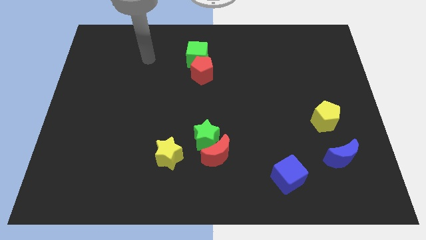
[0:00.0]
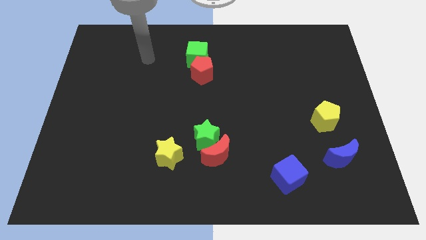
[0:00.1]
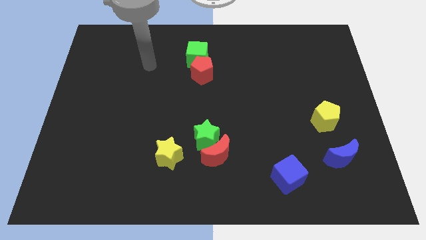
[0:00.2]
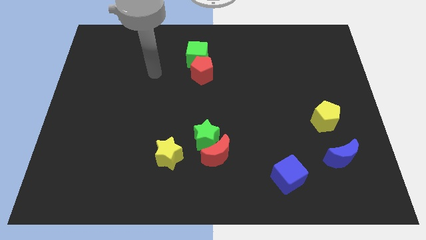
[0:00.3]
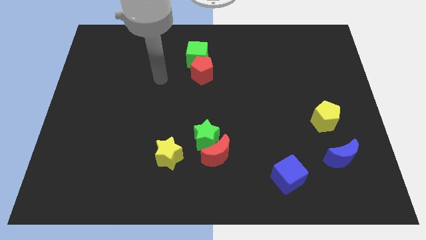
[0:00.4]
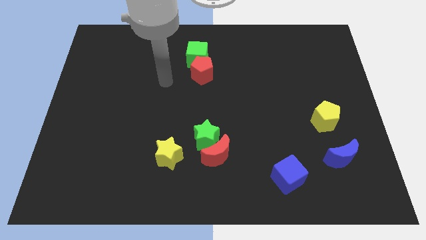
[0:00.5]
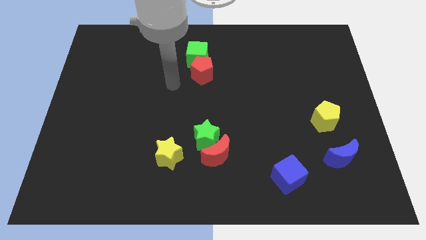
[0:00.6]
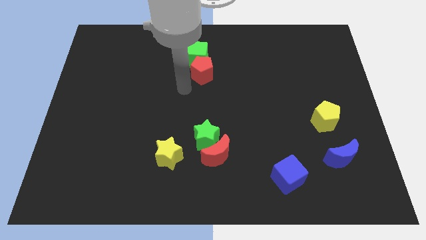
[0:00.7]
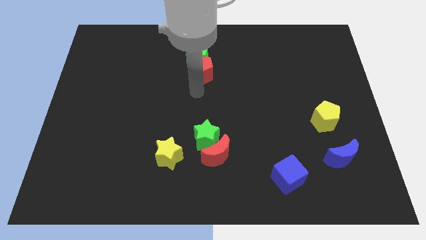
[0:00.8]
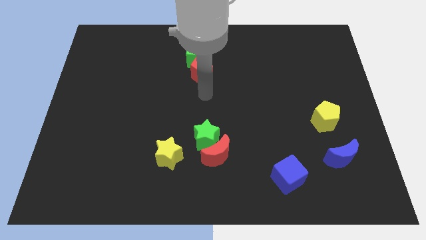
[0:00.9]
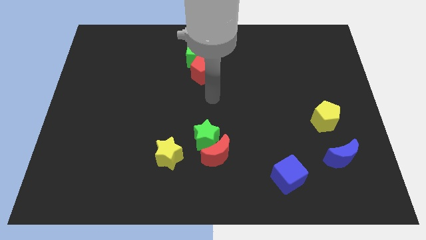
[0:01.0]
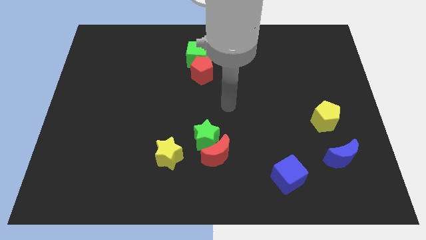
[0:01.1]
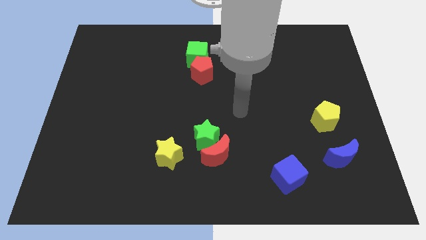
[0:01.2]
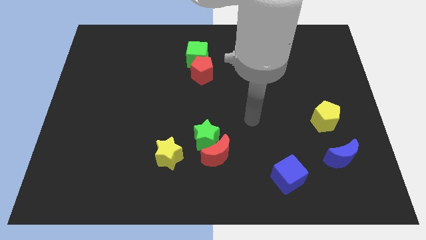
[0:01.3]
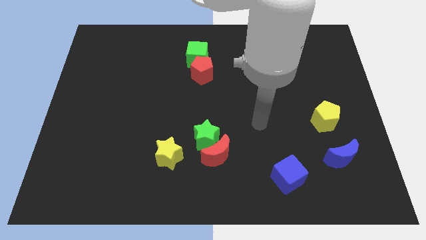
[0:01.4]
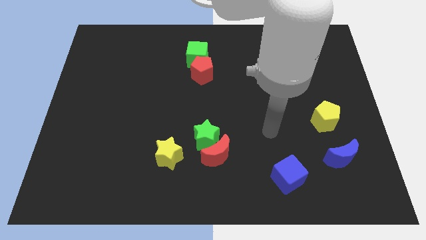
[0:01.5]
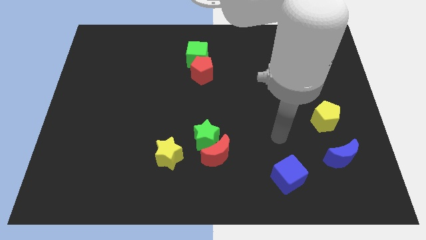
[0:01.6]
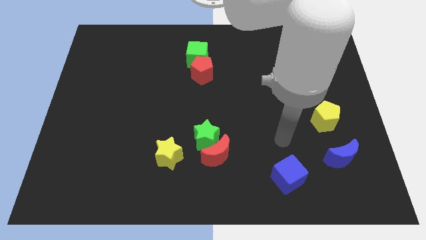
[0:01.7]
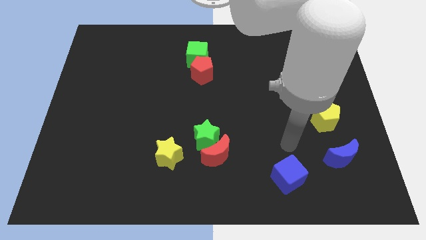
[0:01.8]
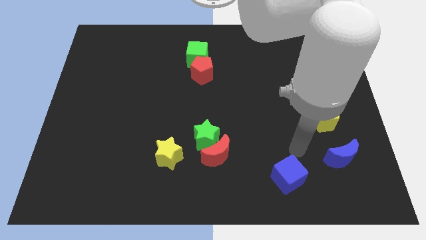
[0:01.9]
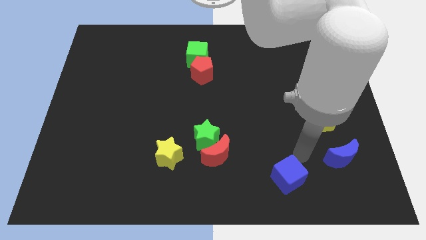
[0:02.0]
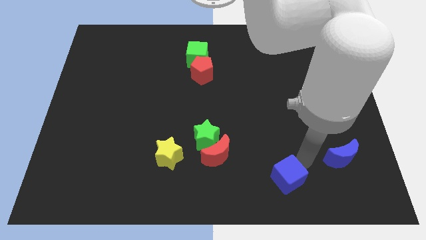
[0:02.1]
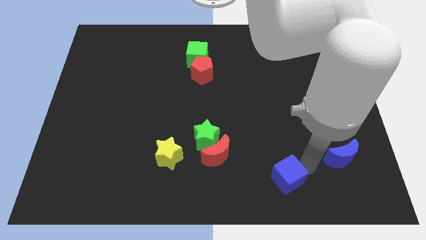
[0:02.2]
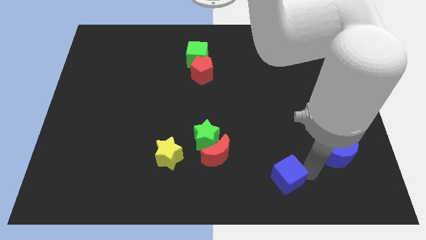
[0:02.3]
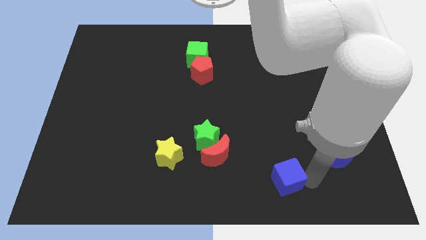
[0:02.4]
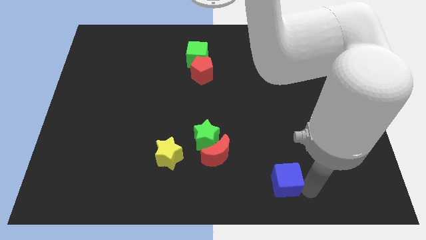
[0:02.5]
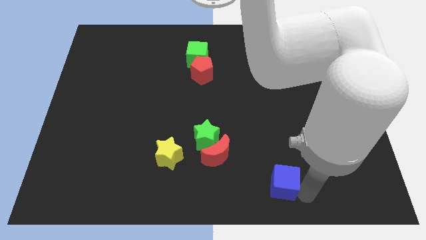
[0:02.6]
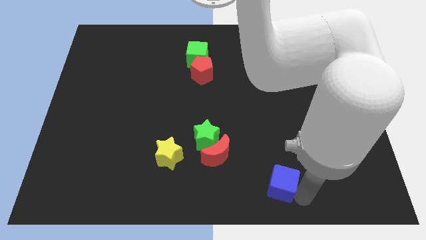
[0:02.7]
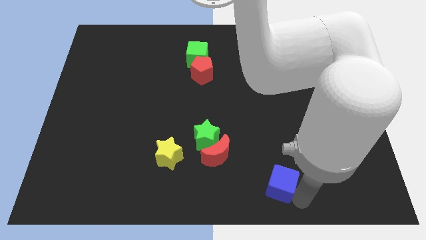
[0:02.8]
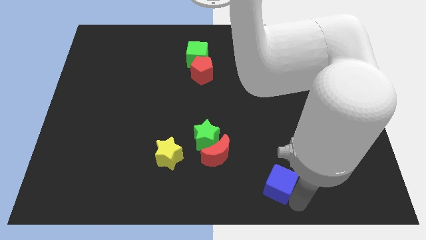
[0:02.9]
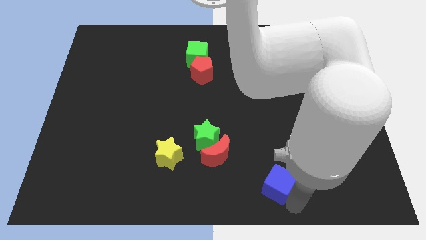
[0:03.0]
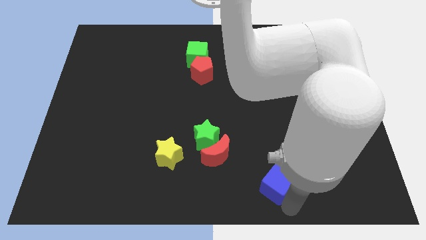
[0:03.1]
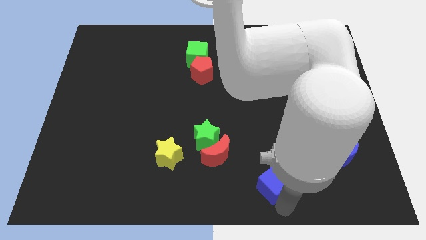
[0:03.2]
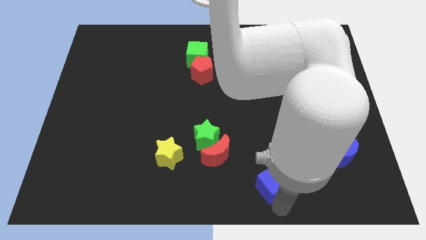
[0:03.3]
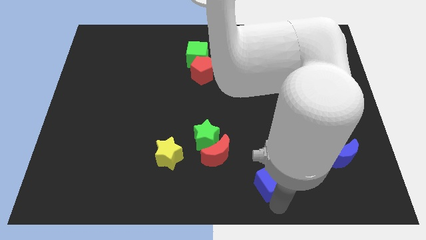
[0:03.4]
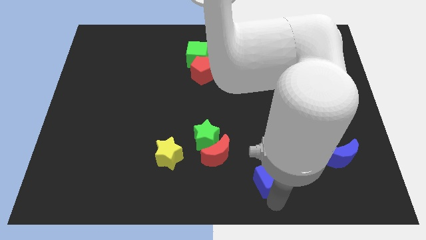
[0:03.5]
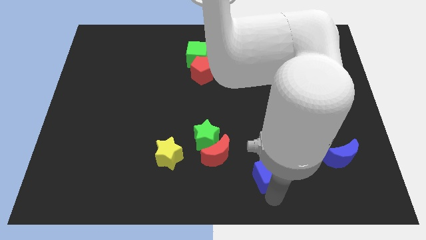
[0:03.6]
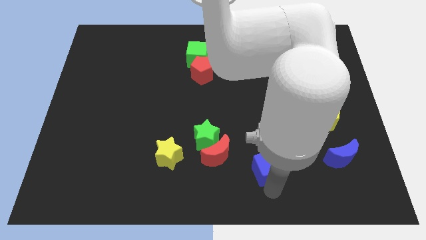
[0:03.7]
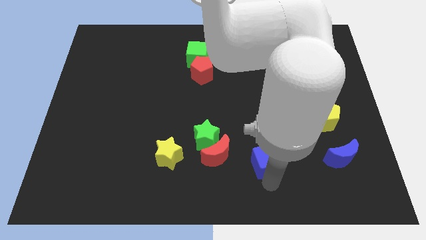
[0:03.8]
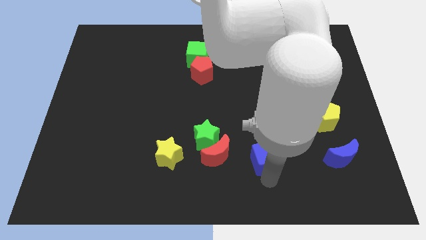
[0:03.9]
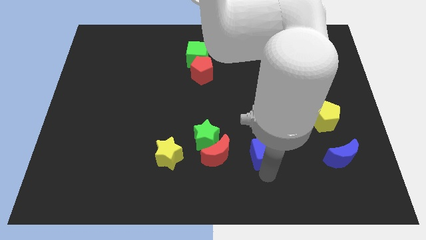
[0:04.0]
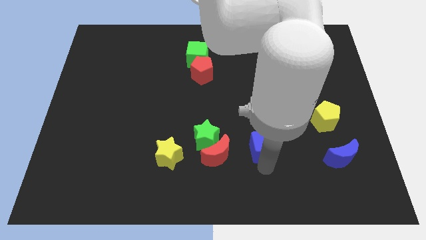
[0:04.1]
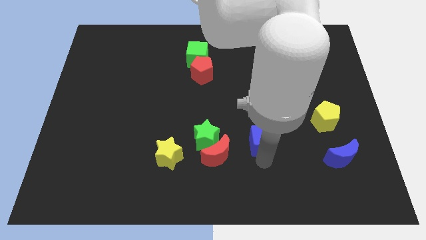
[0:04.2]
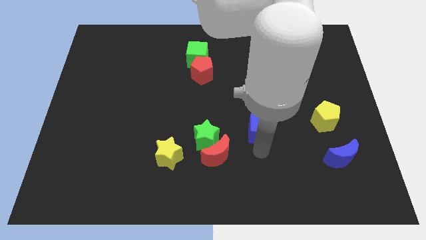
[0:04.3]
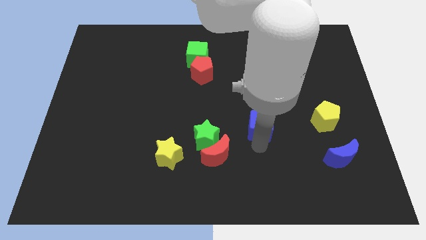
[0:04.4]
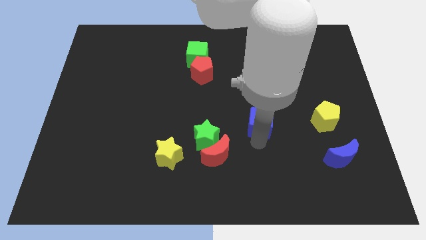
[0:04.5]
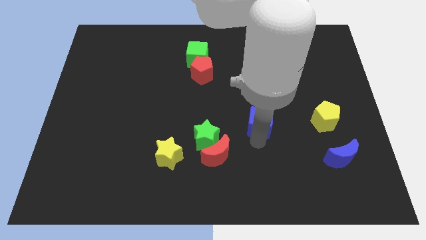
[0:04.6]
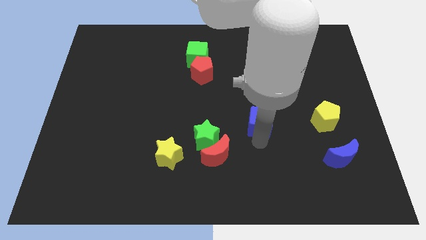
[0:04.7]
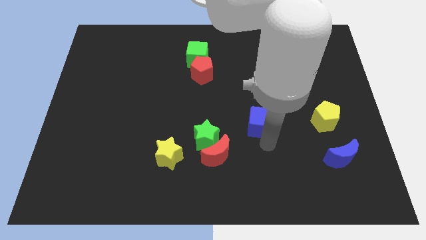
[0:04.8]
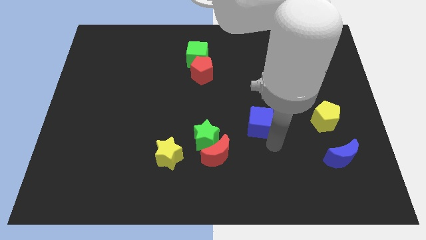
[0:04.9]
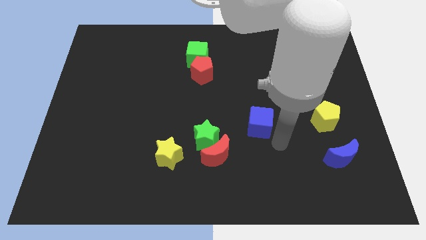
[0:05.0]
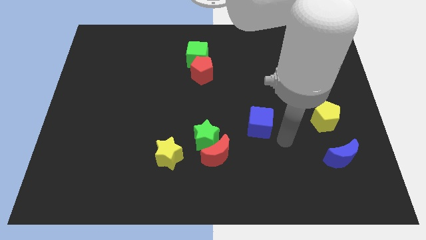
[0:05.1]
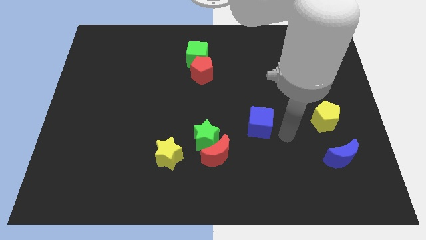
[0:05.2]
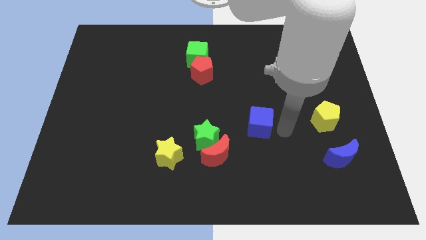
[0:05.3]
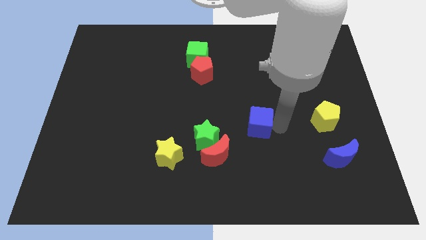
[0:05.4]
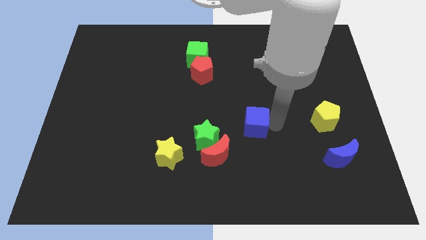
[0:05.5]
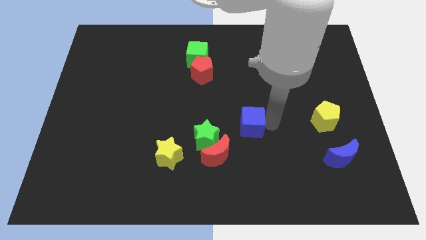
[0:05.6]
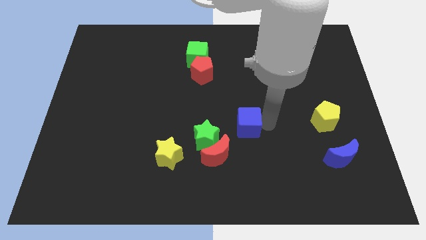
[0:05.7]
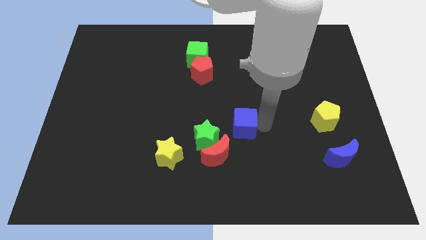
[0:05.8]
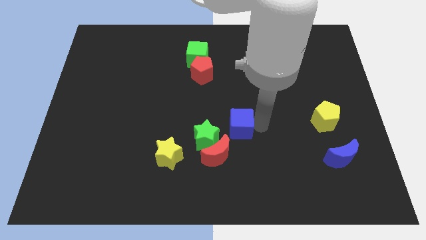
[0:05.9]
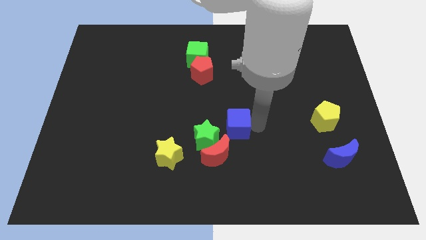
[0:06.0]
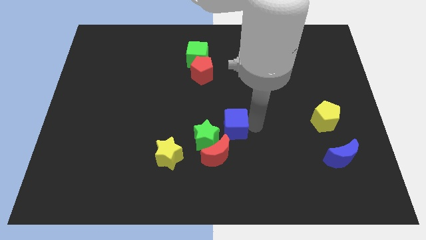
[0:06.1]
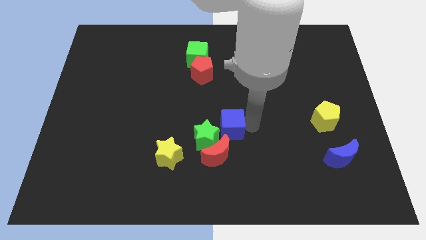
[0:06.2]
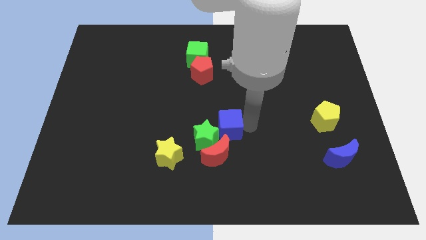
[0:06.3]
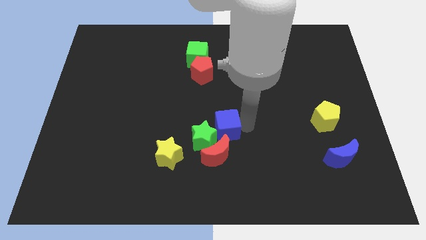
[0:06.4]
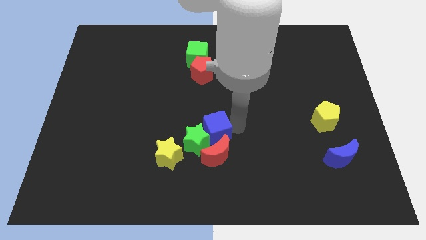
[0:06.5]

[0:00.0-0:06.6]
slide the blue cube next to the green star

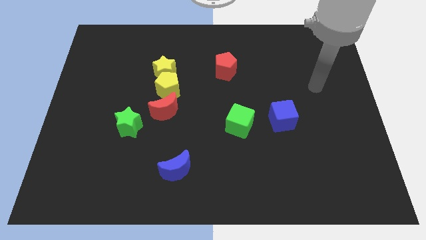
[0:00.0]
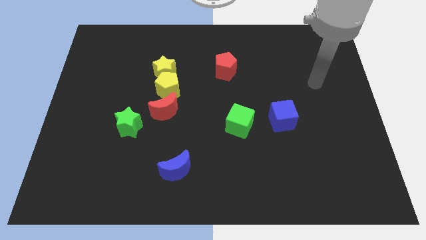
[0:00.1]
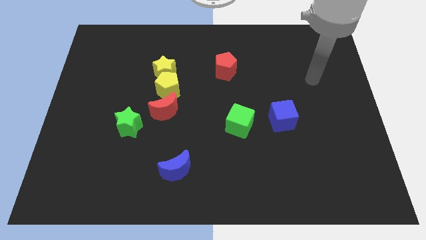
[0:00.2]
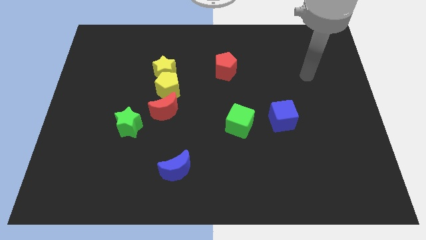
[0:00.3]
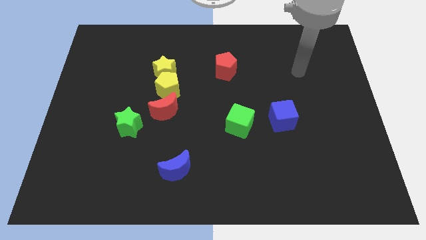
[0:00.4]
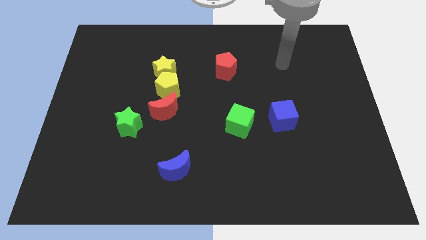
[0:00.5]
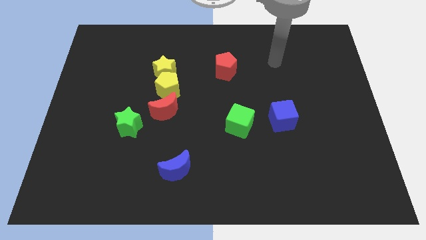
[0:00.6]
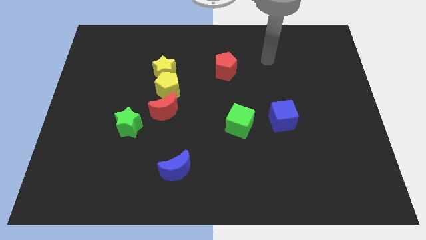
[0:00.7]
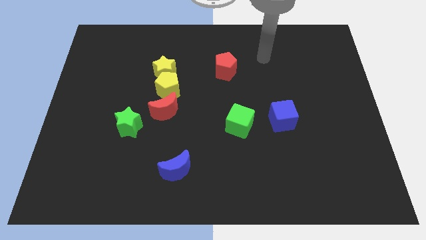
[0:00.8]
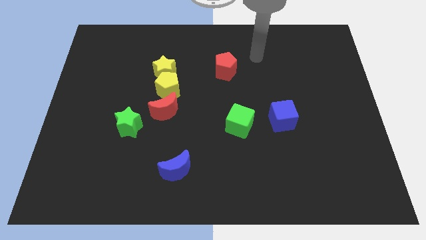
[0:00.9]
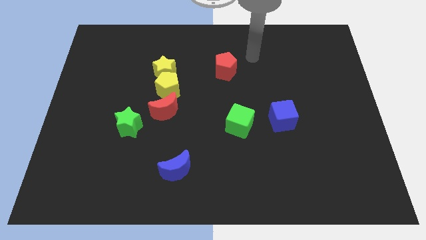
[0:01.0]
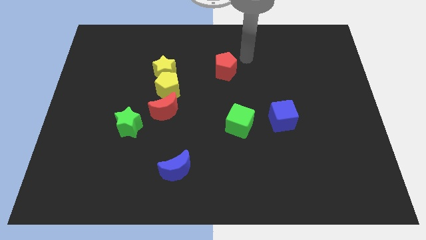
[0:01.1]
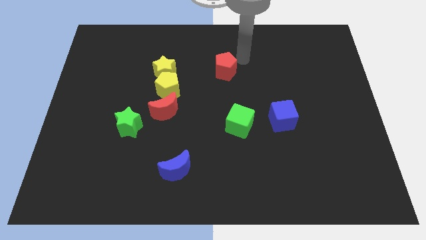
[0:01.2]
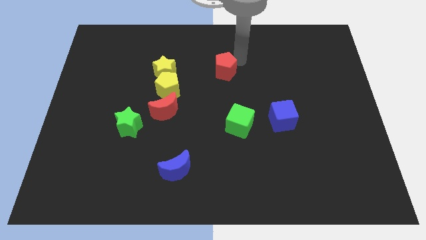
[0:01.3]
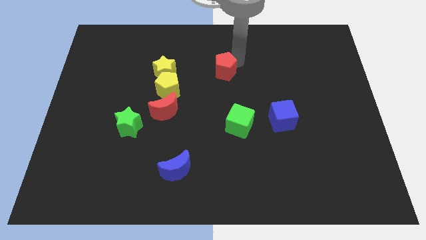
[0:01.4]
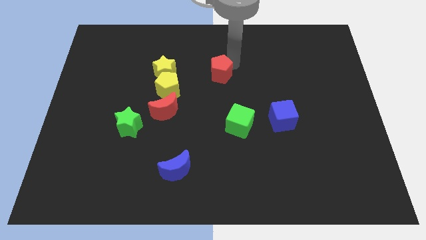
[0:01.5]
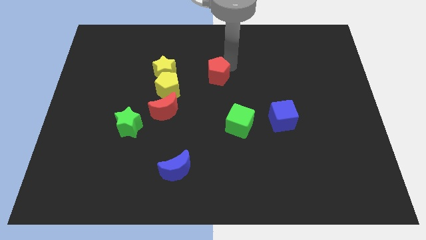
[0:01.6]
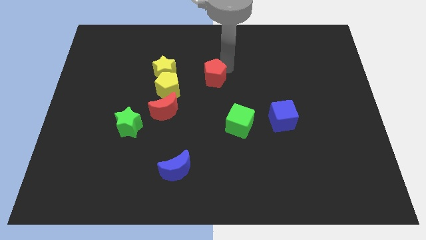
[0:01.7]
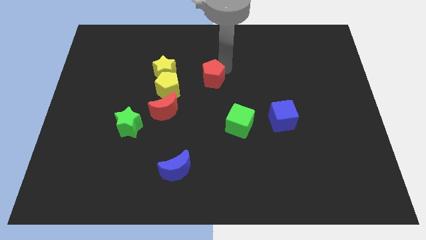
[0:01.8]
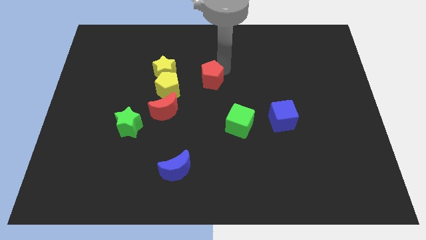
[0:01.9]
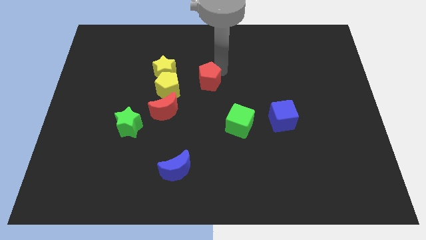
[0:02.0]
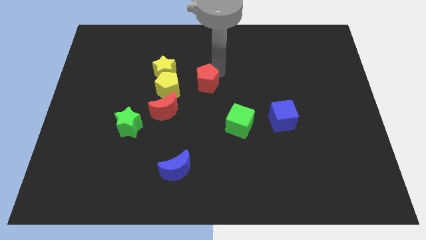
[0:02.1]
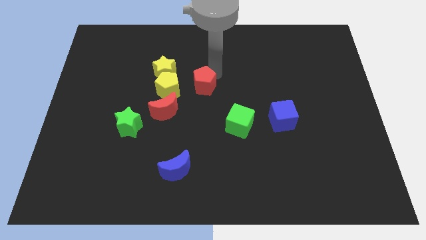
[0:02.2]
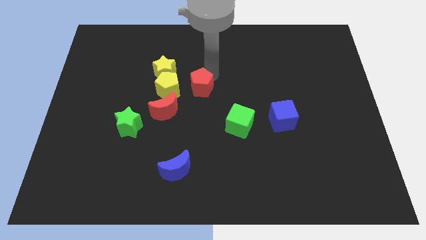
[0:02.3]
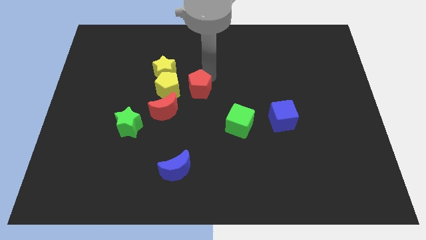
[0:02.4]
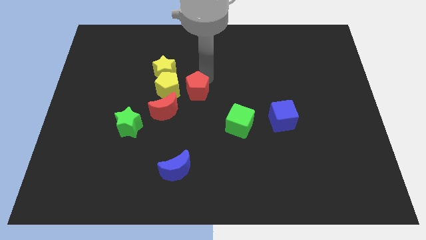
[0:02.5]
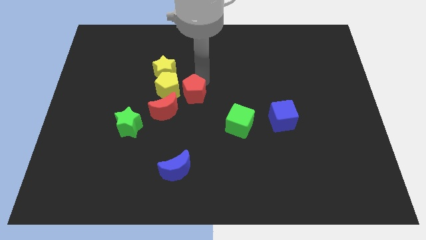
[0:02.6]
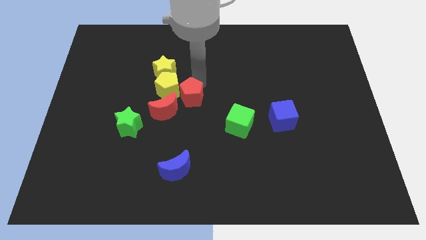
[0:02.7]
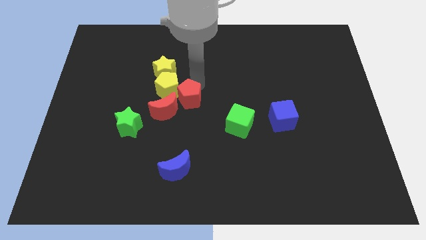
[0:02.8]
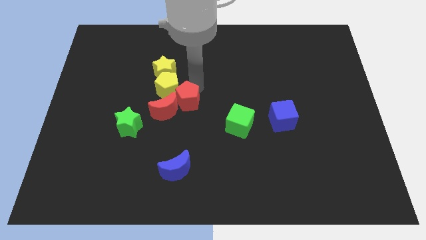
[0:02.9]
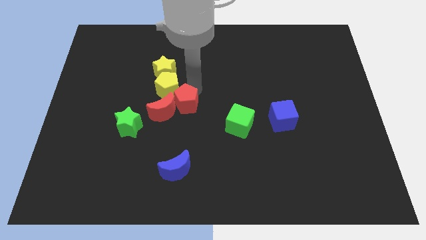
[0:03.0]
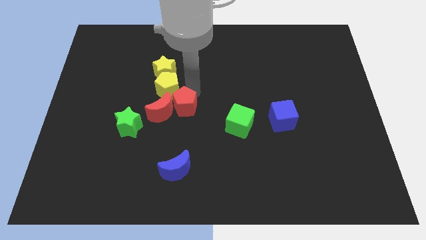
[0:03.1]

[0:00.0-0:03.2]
put the red pentagon towards the red moon
